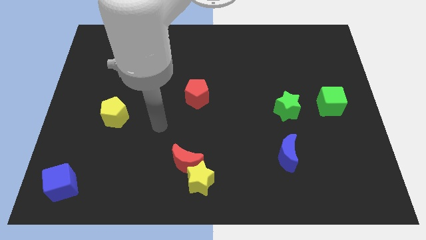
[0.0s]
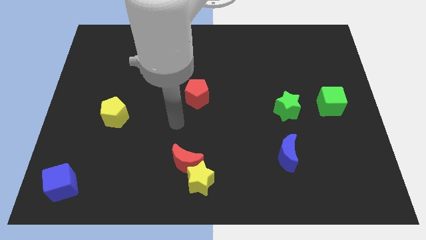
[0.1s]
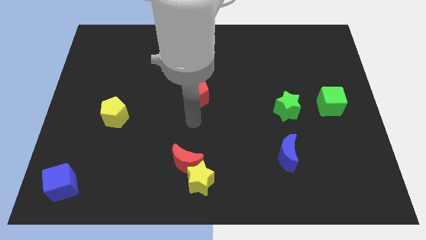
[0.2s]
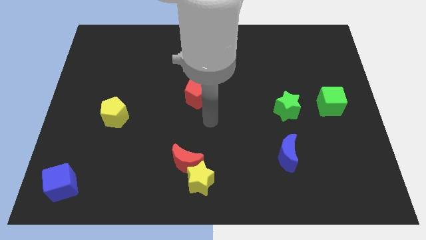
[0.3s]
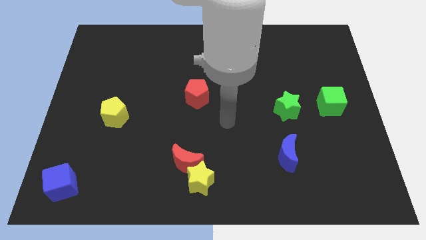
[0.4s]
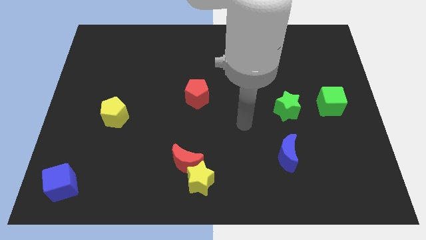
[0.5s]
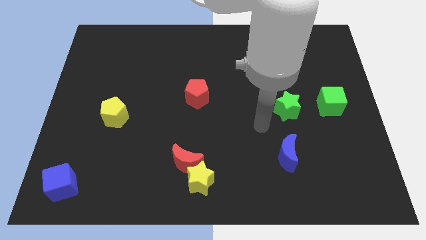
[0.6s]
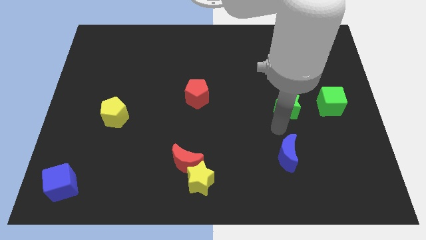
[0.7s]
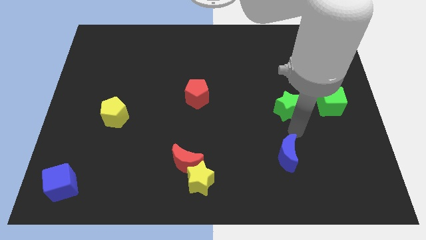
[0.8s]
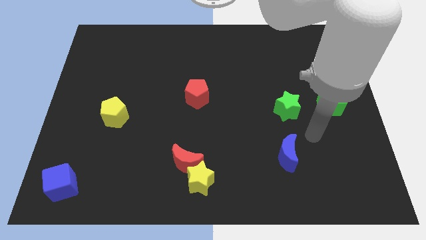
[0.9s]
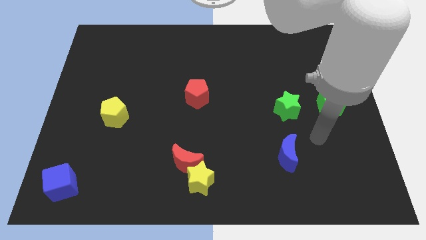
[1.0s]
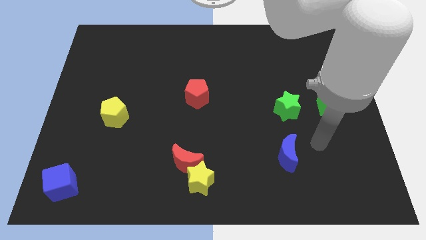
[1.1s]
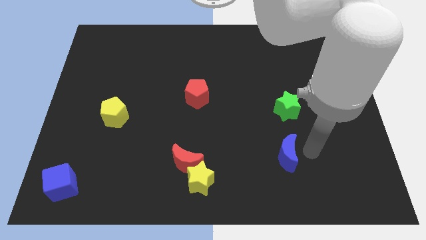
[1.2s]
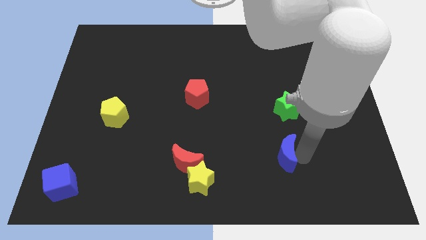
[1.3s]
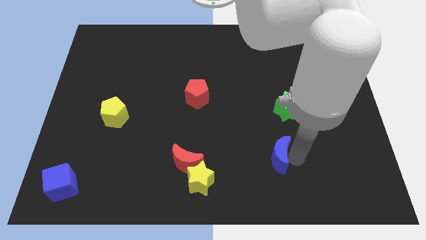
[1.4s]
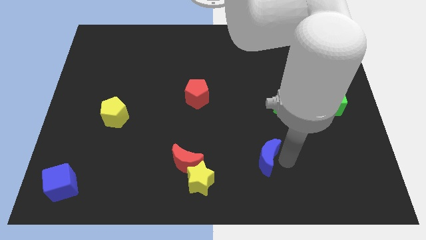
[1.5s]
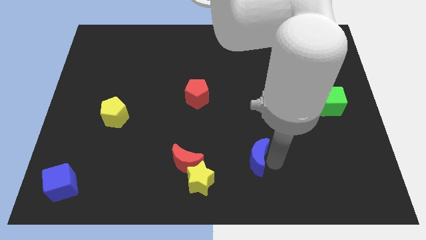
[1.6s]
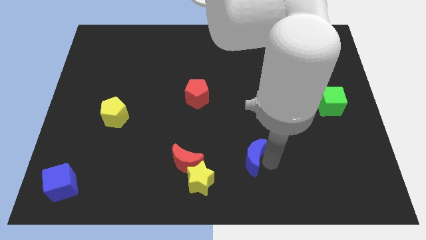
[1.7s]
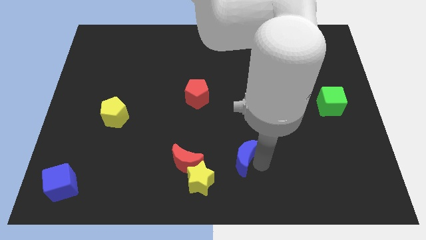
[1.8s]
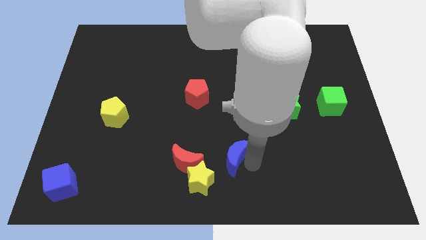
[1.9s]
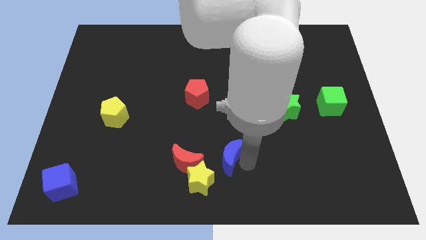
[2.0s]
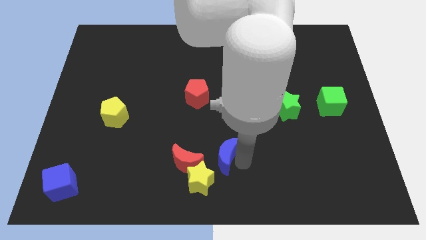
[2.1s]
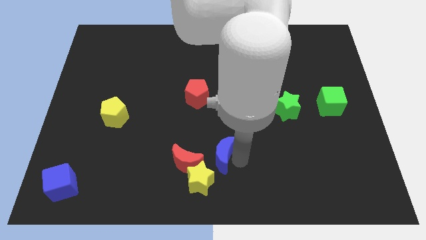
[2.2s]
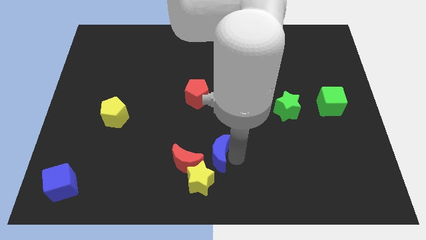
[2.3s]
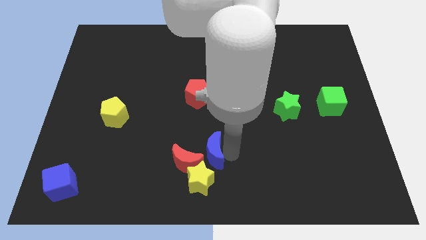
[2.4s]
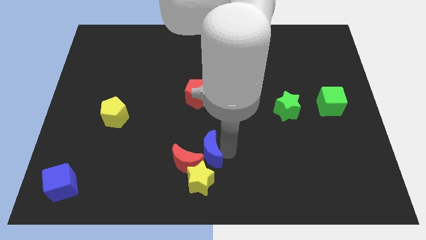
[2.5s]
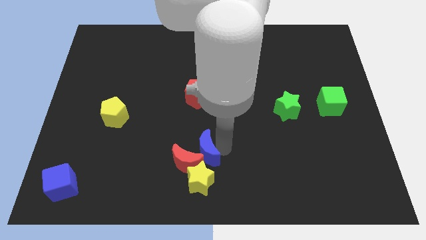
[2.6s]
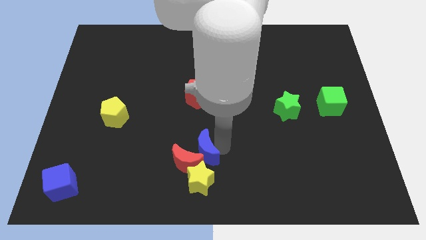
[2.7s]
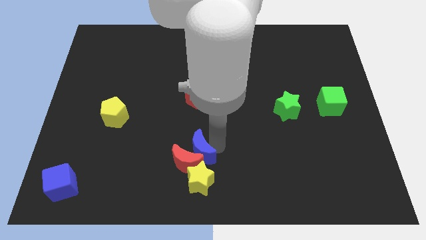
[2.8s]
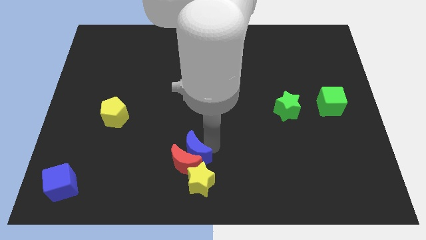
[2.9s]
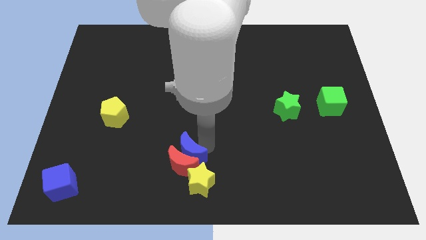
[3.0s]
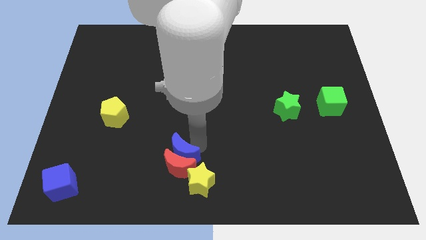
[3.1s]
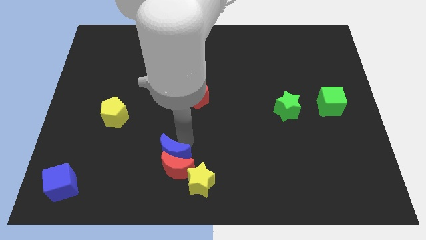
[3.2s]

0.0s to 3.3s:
push the blue moon into the red moon

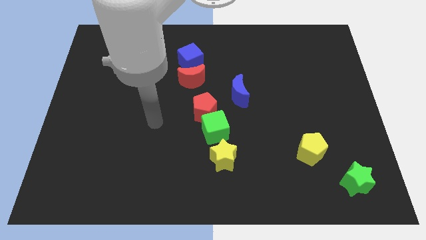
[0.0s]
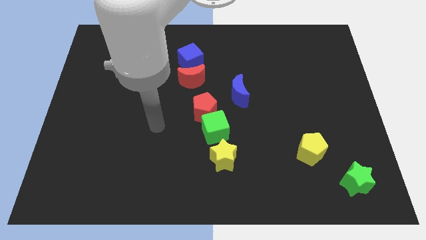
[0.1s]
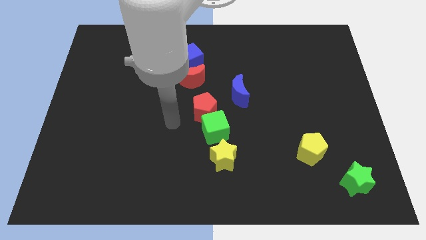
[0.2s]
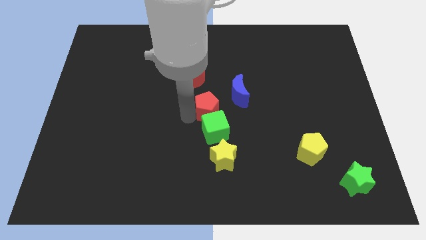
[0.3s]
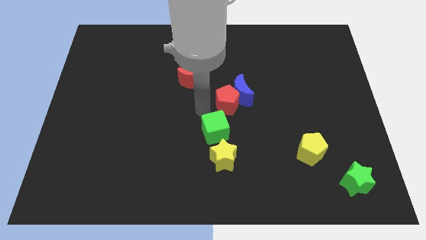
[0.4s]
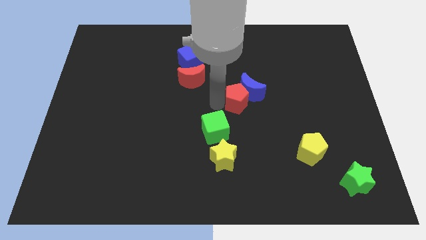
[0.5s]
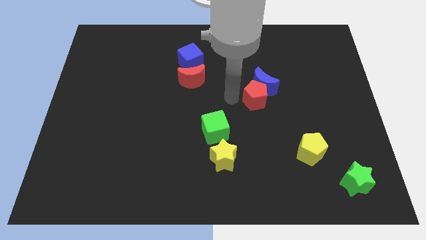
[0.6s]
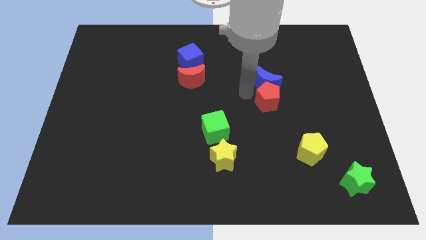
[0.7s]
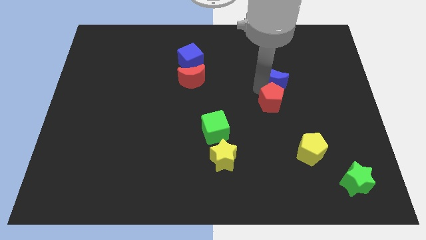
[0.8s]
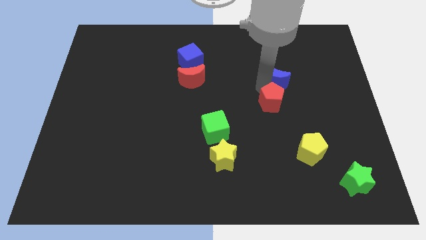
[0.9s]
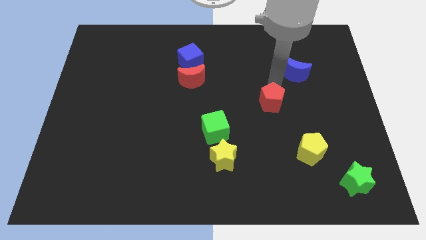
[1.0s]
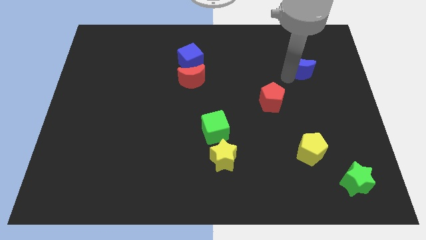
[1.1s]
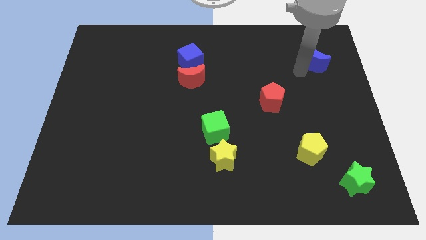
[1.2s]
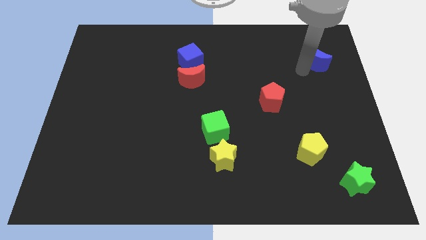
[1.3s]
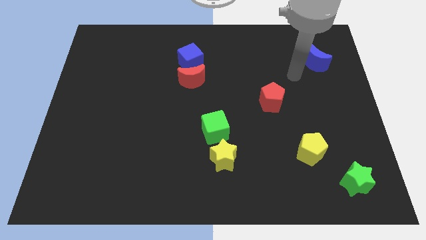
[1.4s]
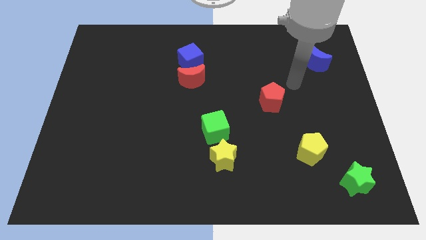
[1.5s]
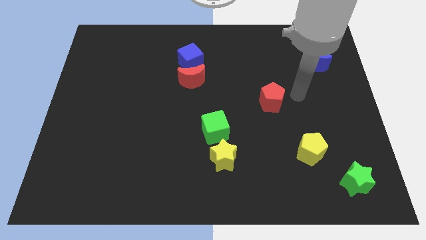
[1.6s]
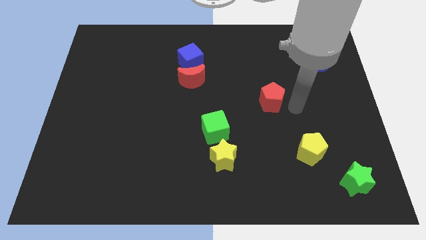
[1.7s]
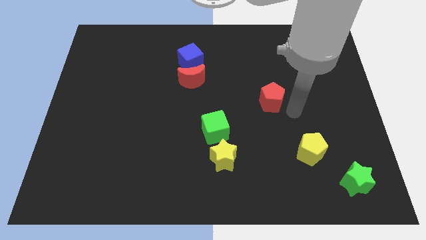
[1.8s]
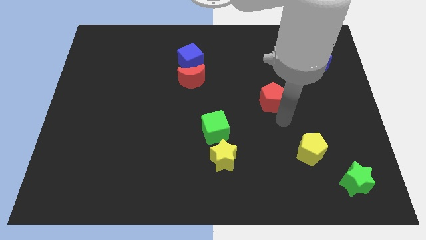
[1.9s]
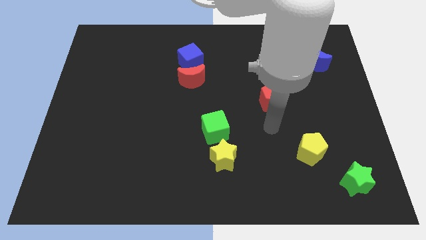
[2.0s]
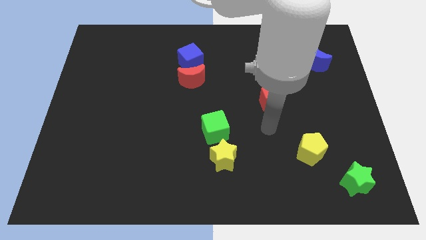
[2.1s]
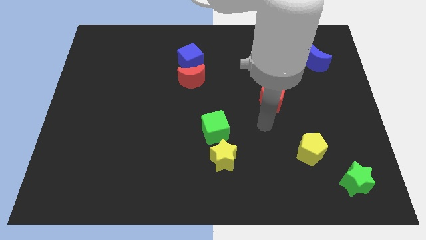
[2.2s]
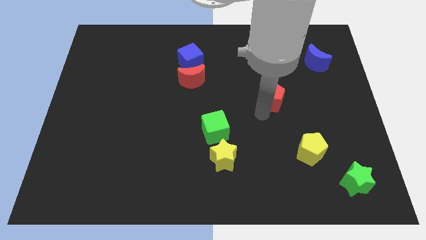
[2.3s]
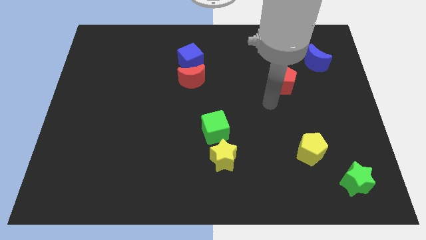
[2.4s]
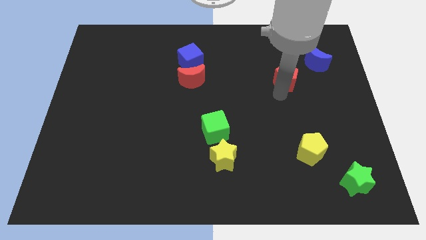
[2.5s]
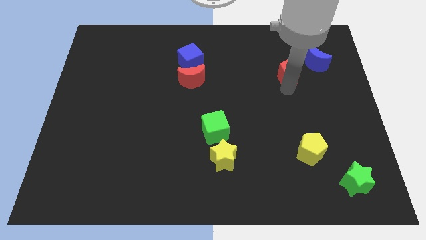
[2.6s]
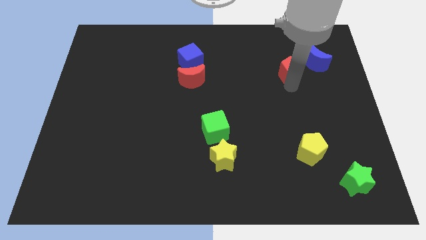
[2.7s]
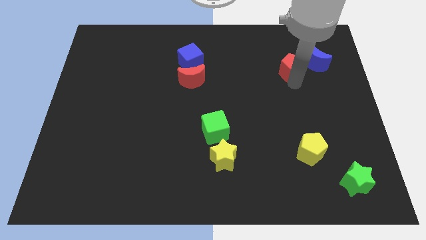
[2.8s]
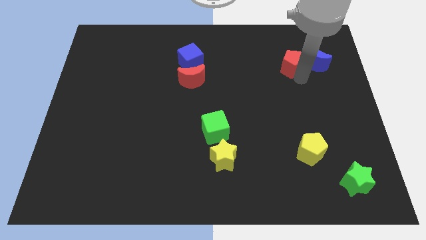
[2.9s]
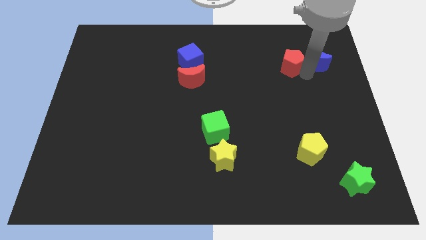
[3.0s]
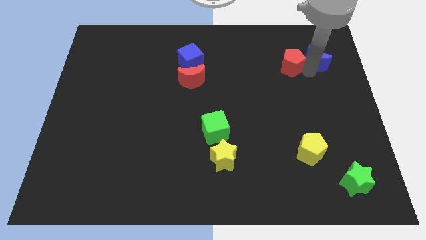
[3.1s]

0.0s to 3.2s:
slide the red pentagon to the left side of the blue crescent

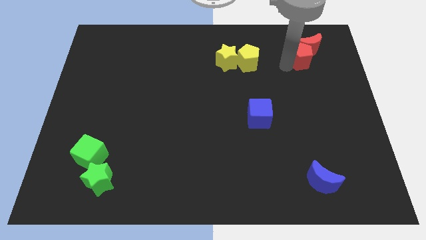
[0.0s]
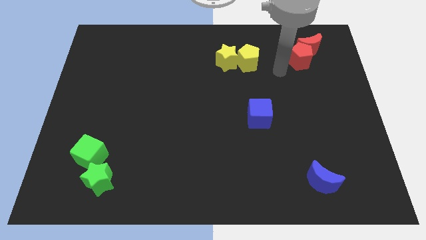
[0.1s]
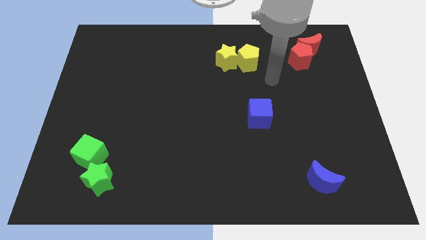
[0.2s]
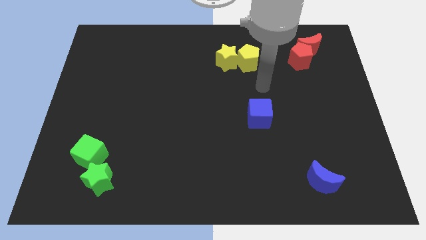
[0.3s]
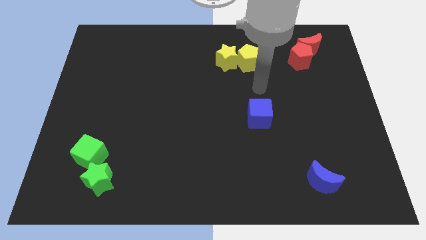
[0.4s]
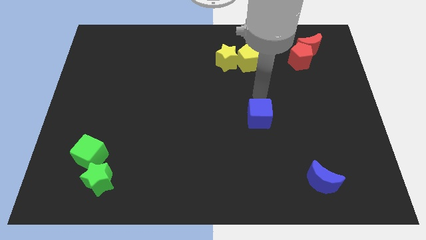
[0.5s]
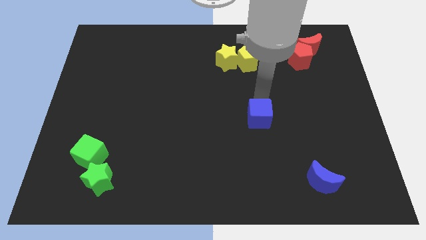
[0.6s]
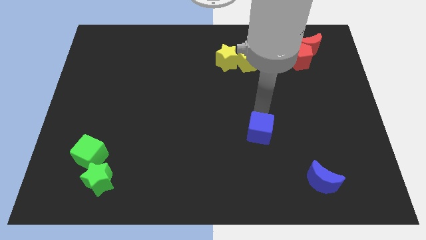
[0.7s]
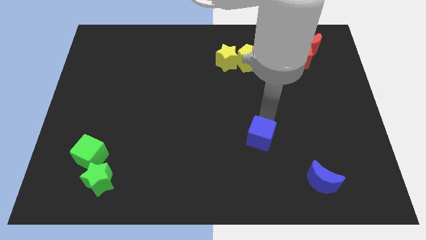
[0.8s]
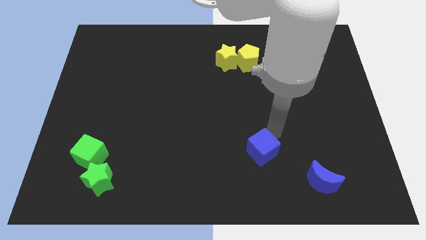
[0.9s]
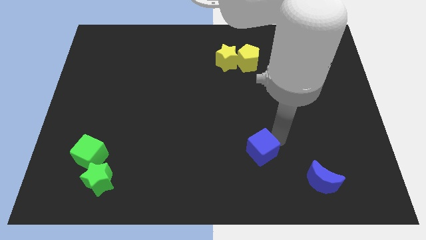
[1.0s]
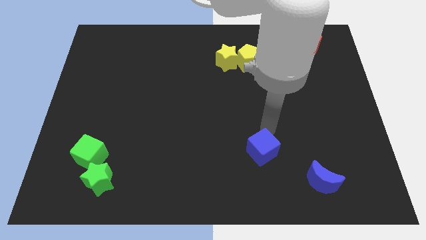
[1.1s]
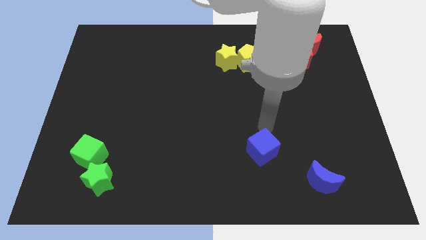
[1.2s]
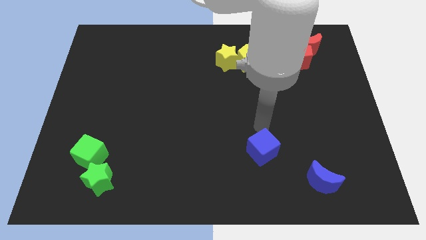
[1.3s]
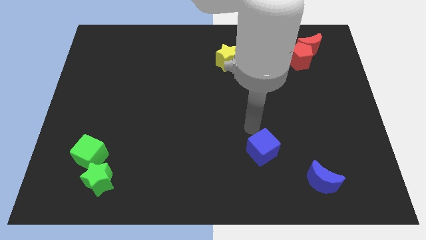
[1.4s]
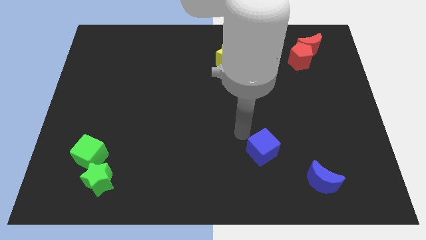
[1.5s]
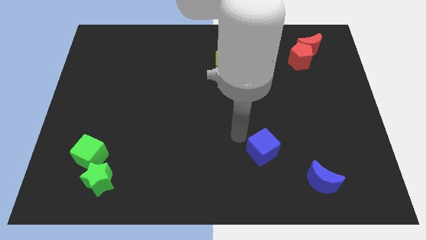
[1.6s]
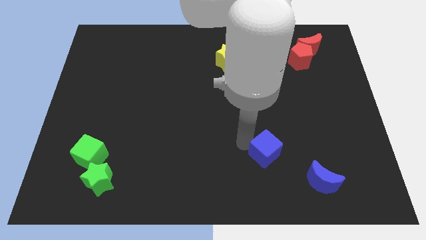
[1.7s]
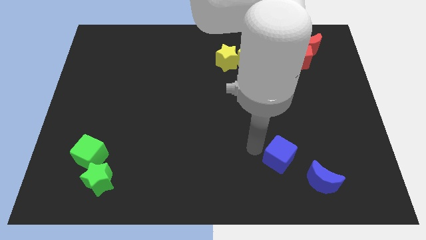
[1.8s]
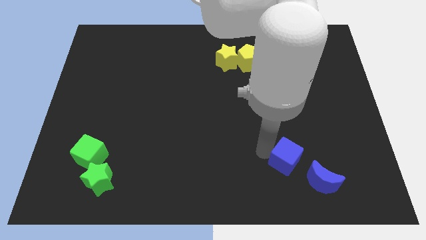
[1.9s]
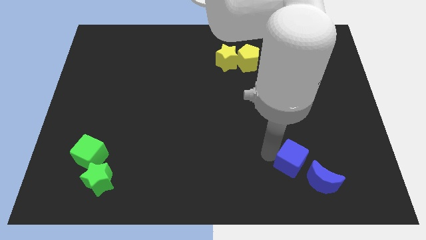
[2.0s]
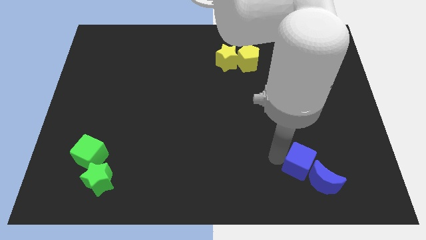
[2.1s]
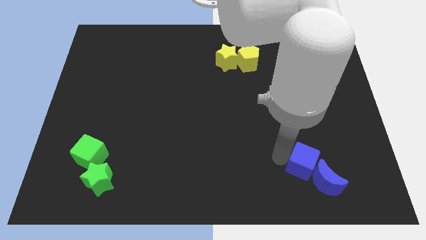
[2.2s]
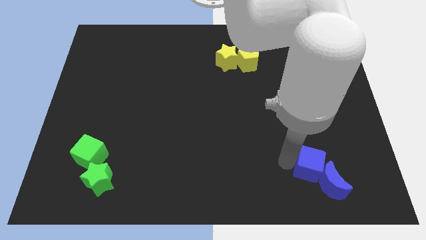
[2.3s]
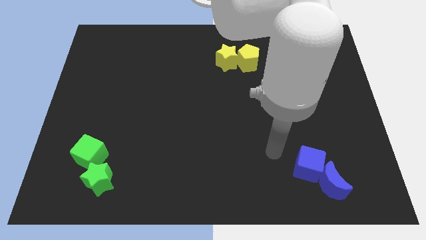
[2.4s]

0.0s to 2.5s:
move the blue cube into the blue moon
